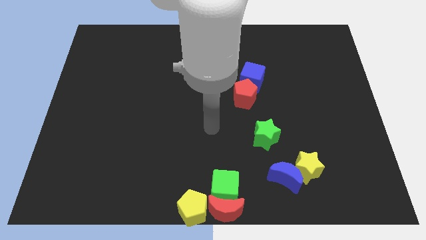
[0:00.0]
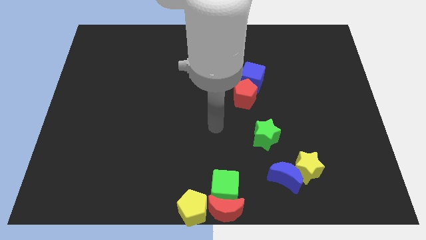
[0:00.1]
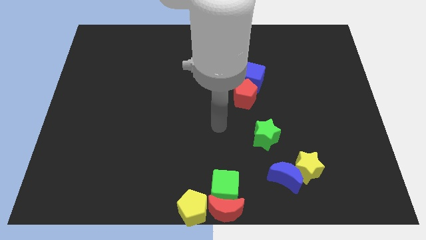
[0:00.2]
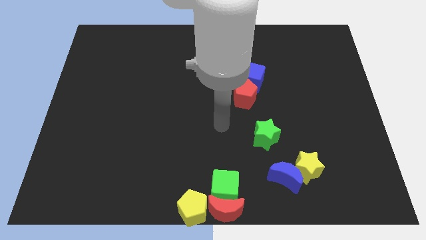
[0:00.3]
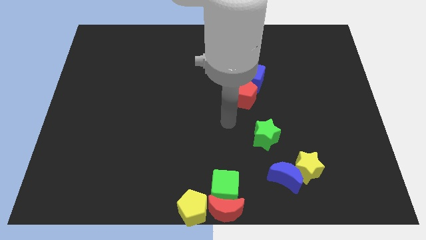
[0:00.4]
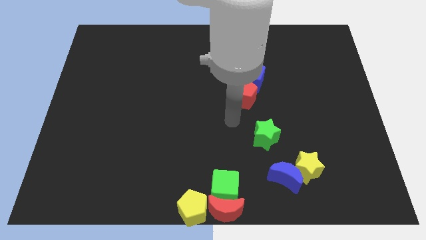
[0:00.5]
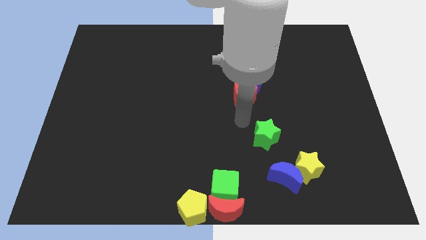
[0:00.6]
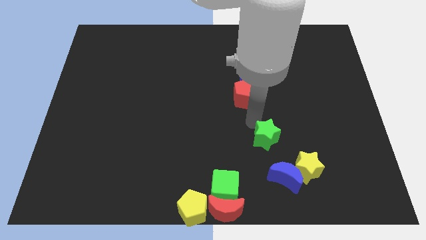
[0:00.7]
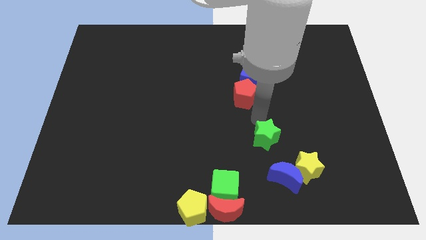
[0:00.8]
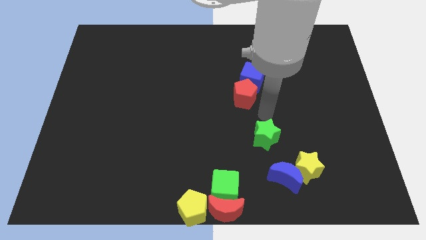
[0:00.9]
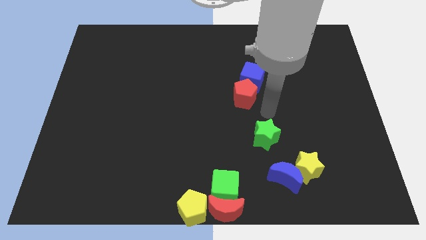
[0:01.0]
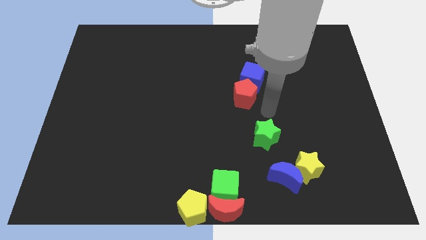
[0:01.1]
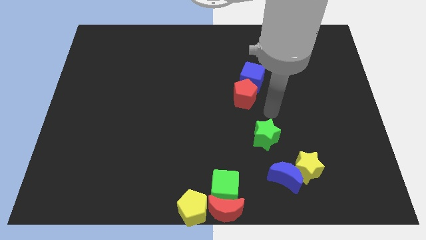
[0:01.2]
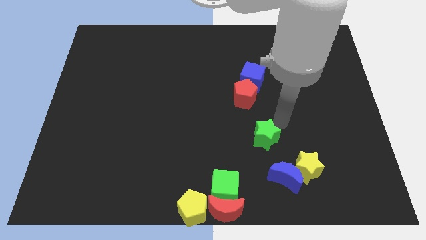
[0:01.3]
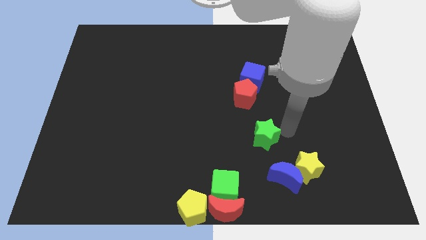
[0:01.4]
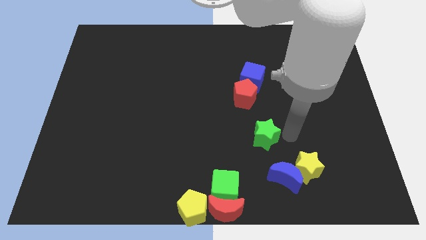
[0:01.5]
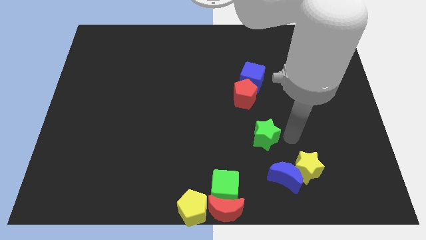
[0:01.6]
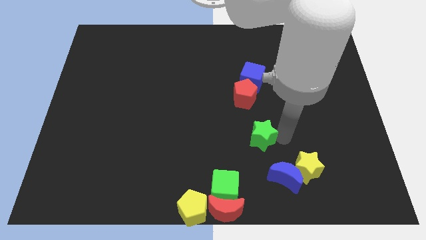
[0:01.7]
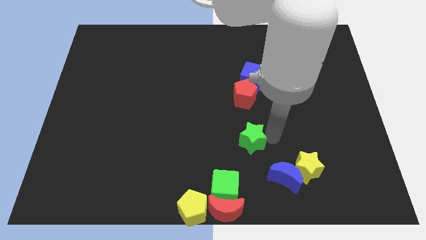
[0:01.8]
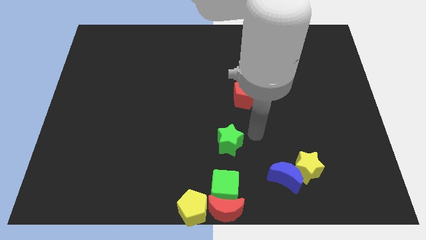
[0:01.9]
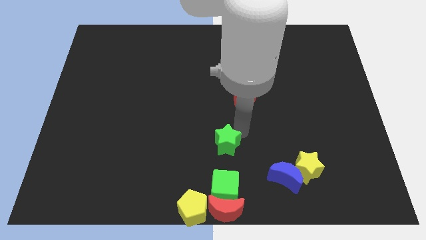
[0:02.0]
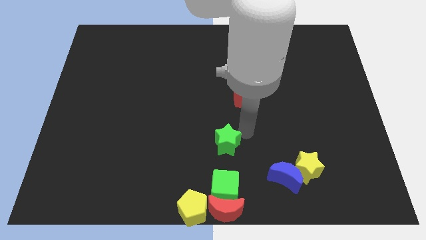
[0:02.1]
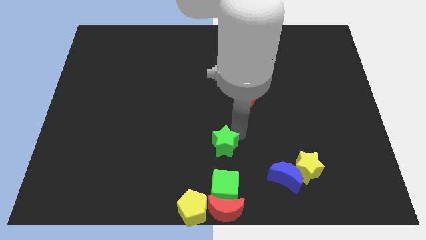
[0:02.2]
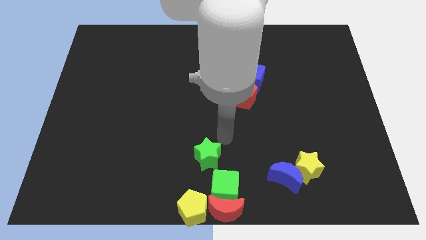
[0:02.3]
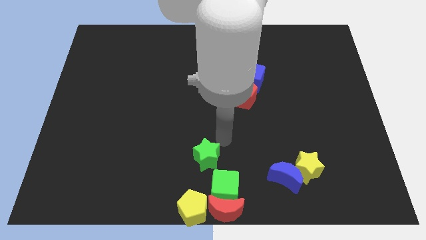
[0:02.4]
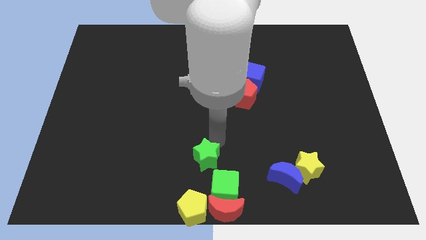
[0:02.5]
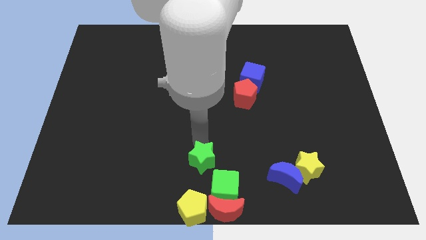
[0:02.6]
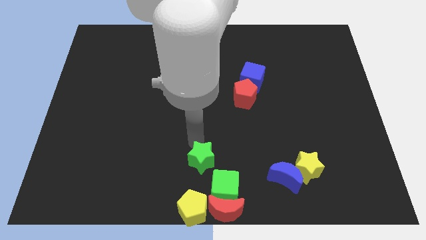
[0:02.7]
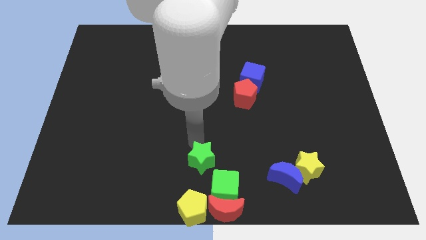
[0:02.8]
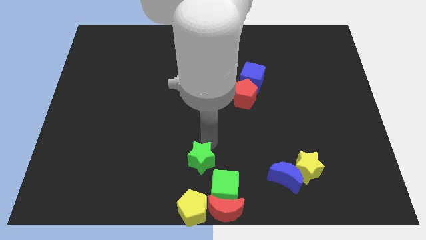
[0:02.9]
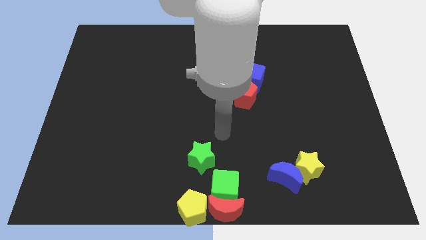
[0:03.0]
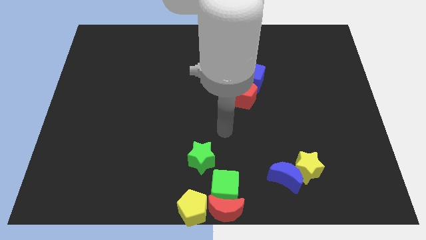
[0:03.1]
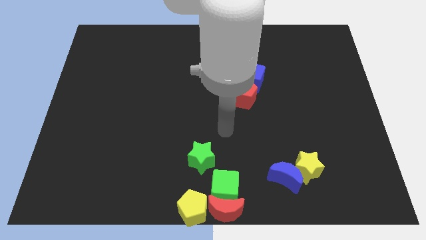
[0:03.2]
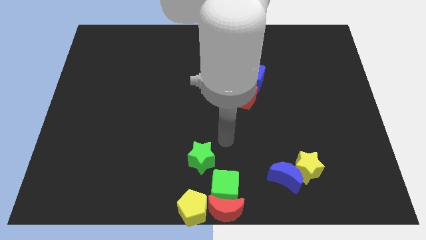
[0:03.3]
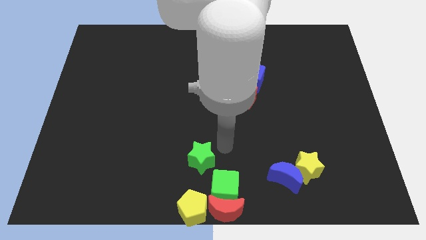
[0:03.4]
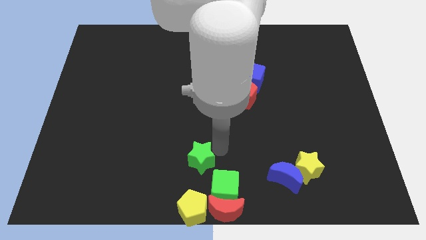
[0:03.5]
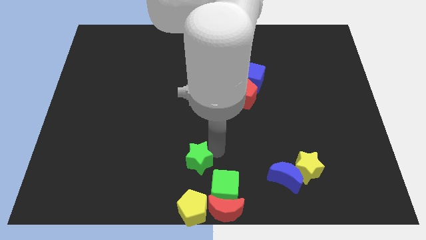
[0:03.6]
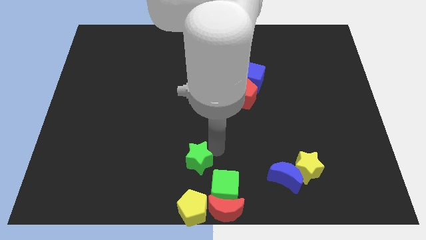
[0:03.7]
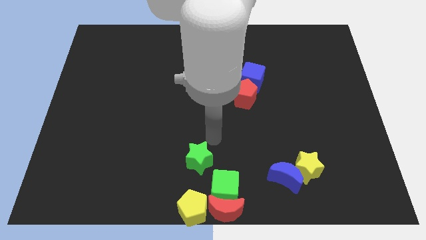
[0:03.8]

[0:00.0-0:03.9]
place the green star above the yellow pentagon

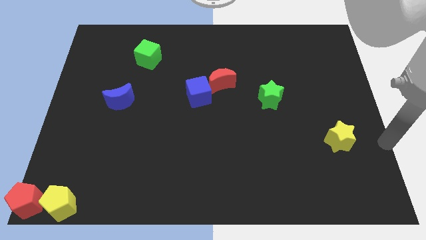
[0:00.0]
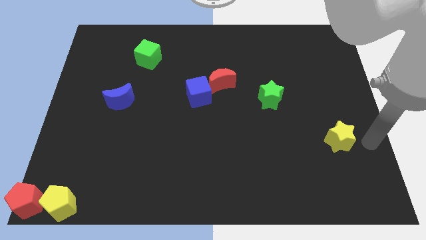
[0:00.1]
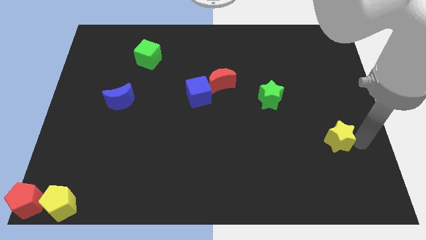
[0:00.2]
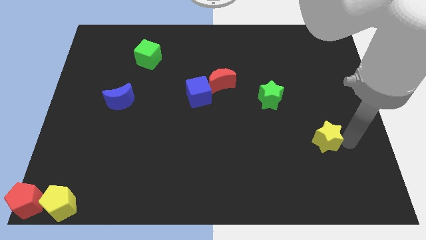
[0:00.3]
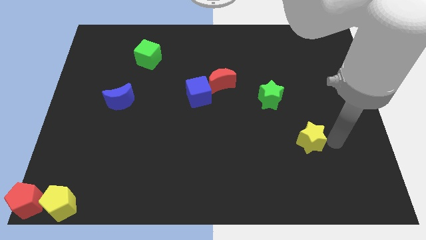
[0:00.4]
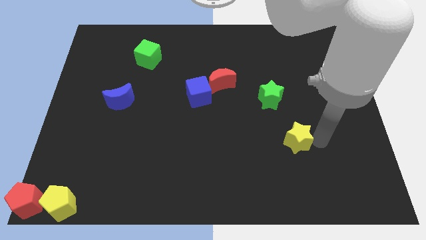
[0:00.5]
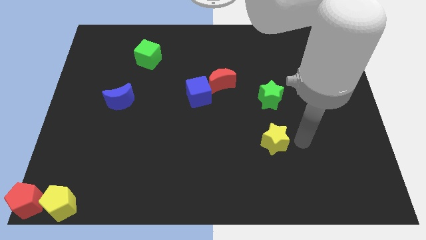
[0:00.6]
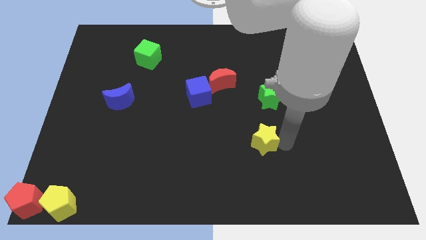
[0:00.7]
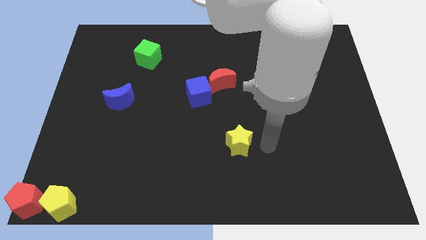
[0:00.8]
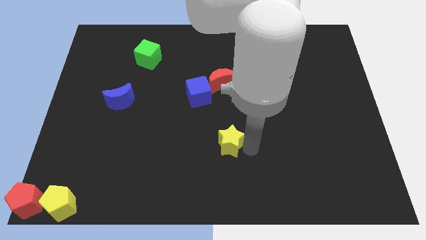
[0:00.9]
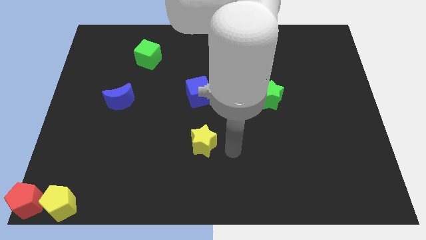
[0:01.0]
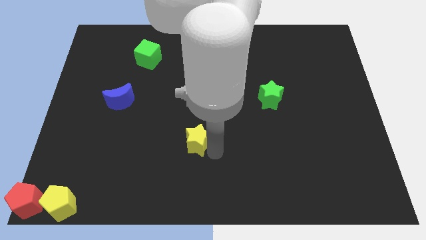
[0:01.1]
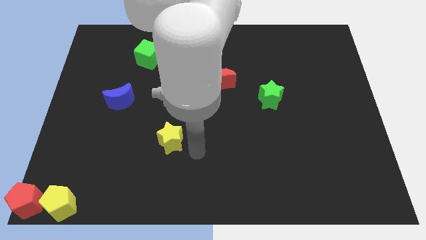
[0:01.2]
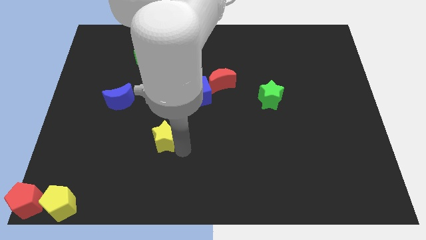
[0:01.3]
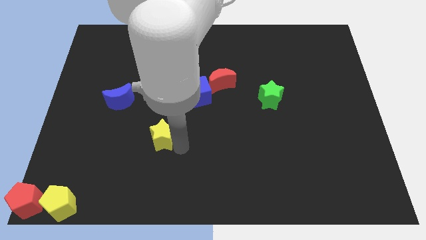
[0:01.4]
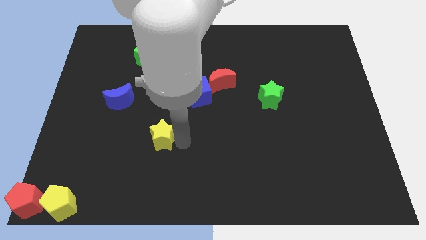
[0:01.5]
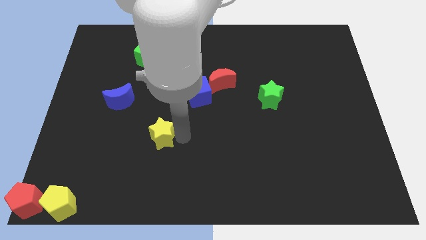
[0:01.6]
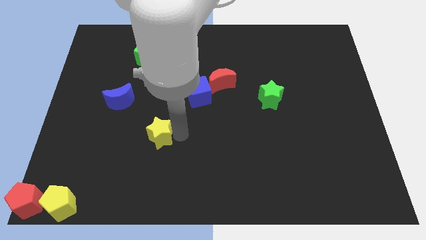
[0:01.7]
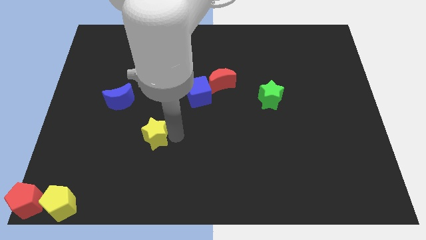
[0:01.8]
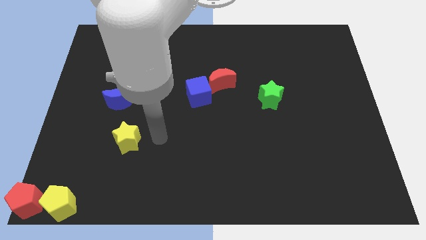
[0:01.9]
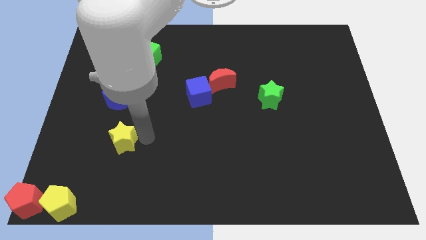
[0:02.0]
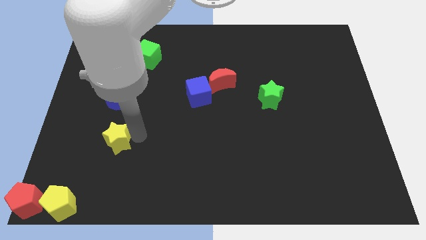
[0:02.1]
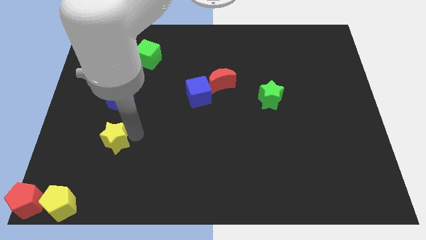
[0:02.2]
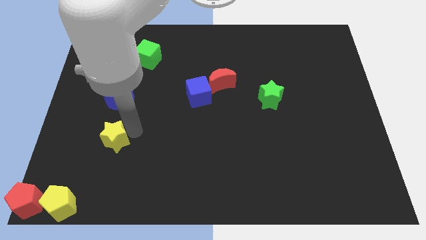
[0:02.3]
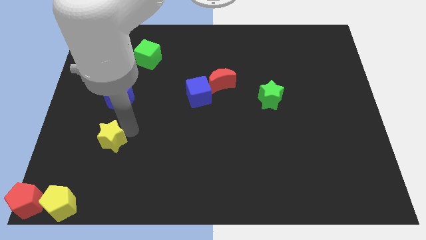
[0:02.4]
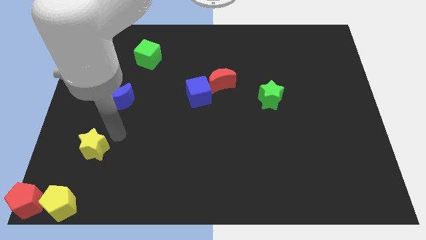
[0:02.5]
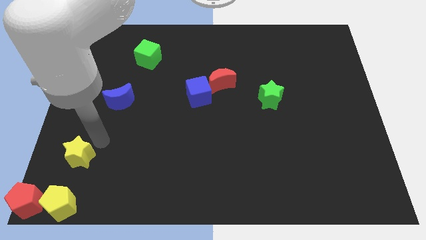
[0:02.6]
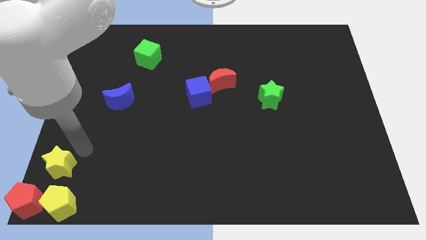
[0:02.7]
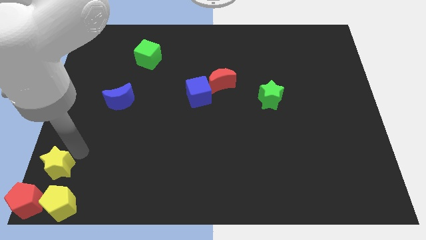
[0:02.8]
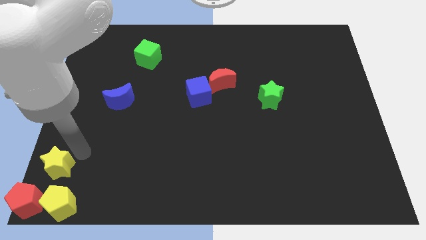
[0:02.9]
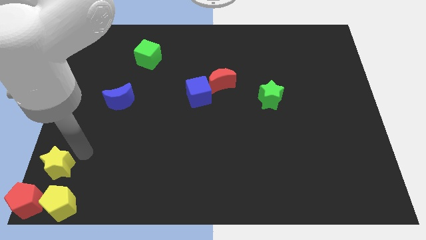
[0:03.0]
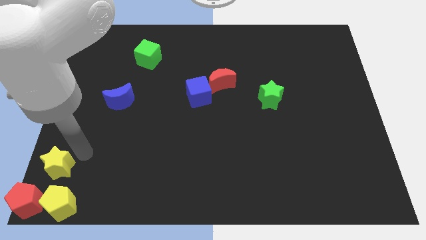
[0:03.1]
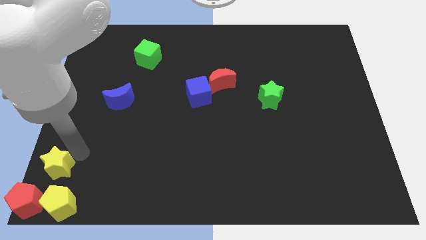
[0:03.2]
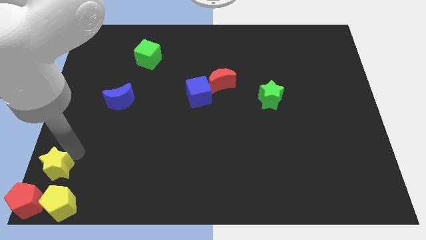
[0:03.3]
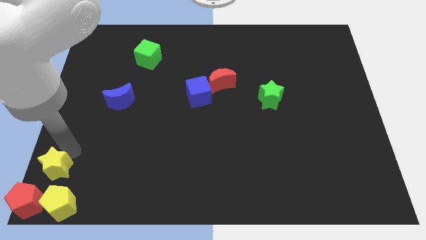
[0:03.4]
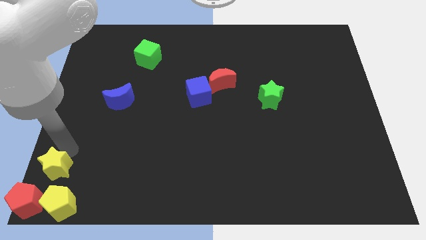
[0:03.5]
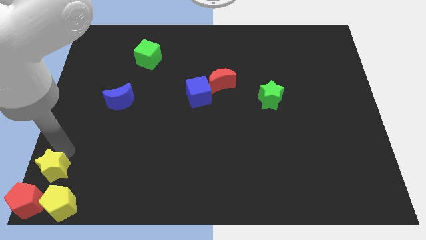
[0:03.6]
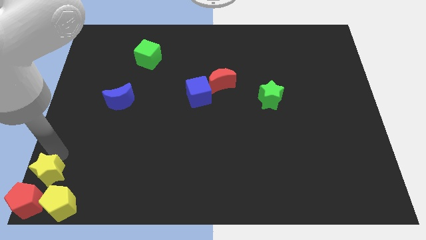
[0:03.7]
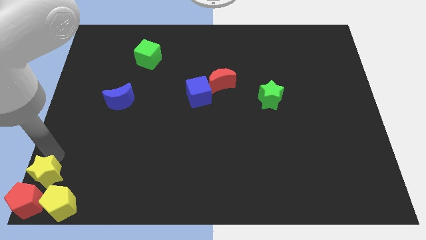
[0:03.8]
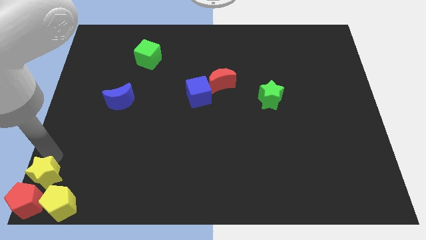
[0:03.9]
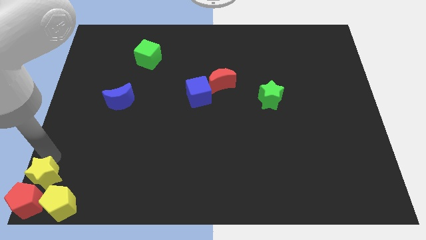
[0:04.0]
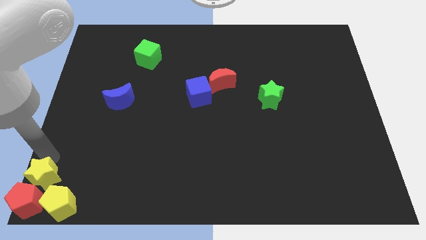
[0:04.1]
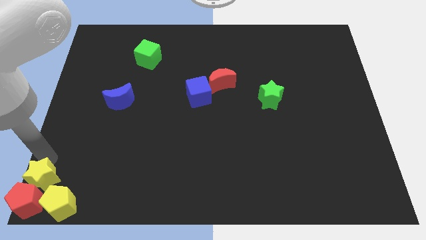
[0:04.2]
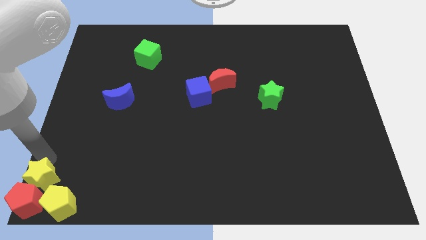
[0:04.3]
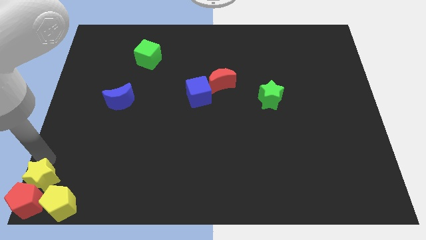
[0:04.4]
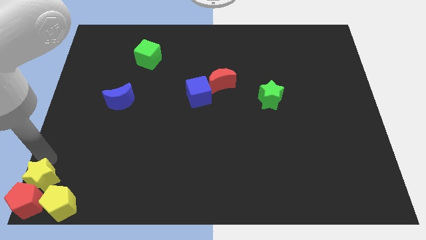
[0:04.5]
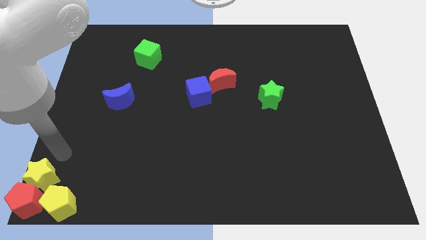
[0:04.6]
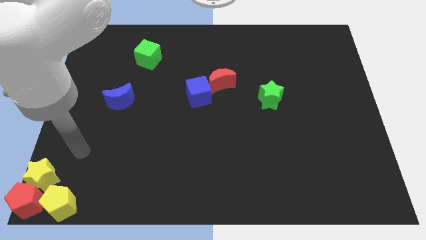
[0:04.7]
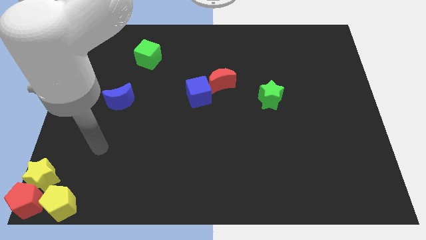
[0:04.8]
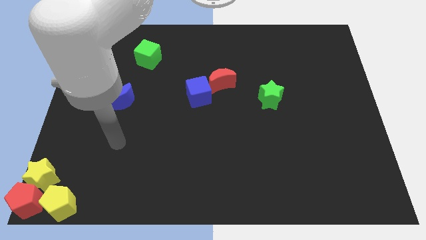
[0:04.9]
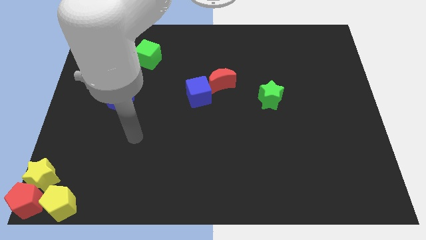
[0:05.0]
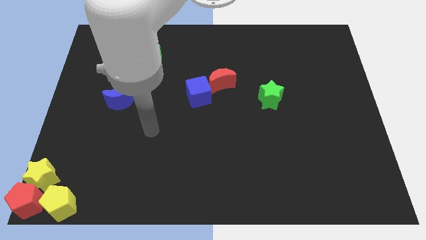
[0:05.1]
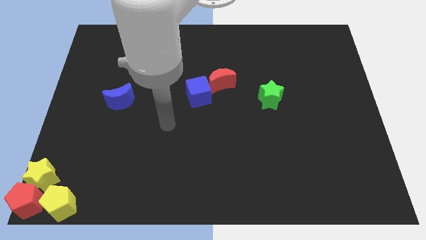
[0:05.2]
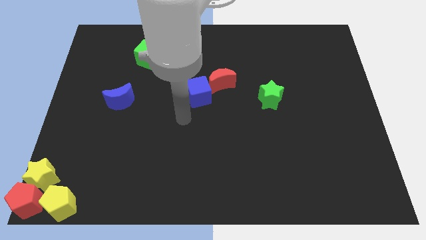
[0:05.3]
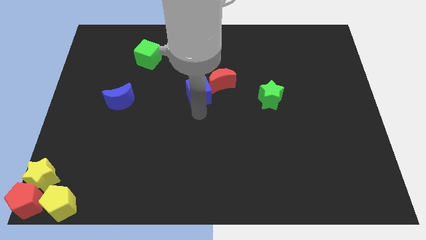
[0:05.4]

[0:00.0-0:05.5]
push the yellow star to the bottom left corner
